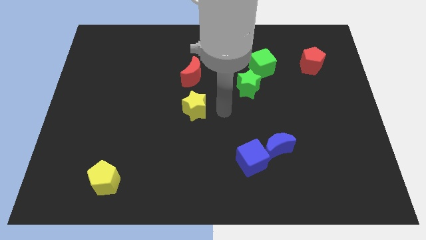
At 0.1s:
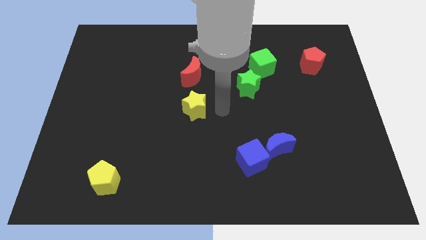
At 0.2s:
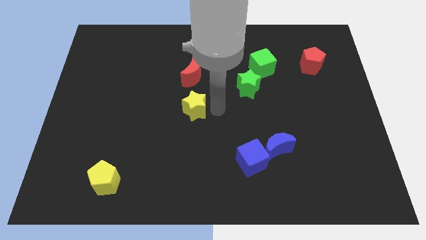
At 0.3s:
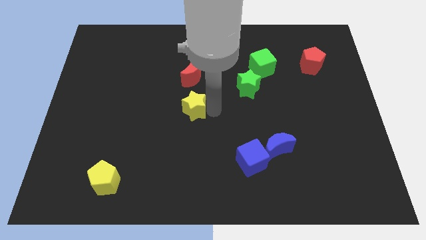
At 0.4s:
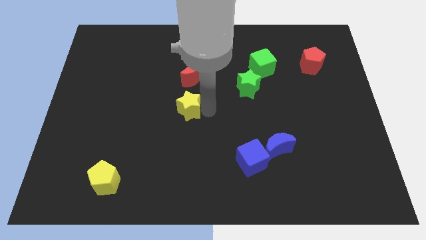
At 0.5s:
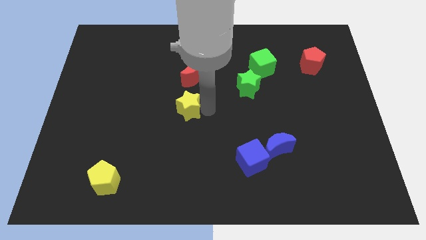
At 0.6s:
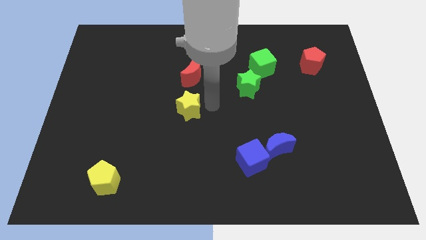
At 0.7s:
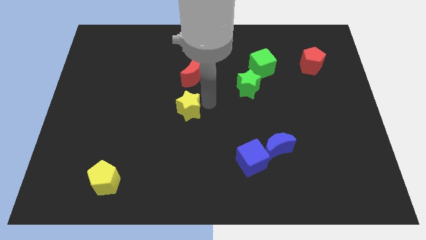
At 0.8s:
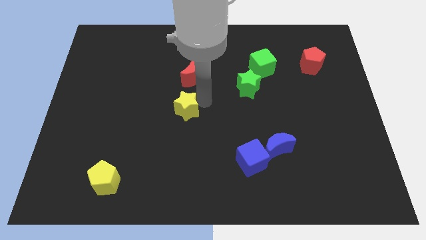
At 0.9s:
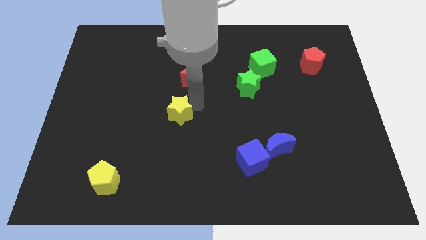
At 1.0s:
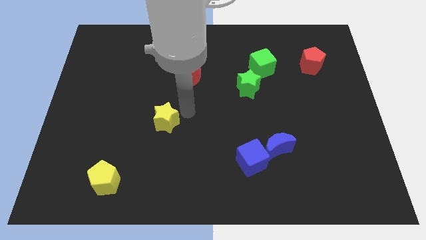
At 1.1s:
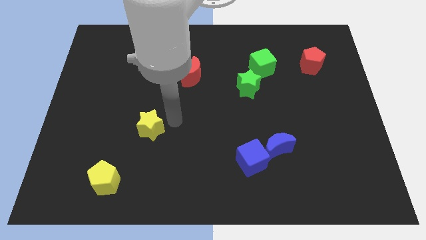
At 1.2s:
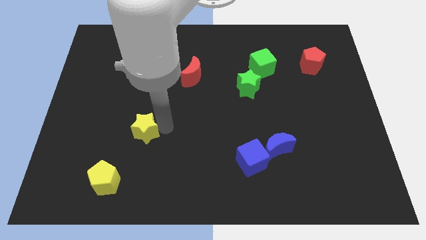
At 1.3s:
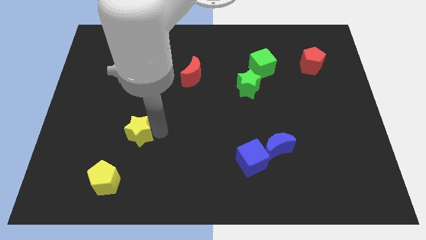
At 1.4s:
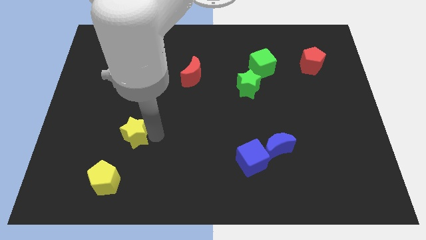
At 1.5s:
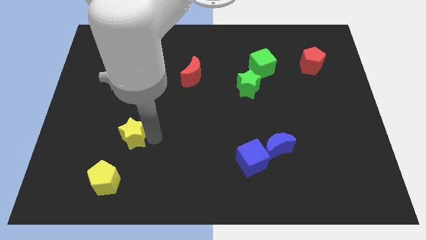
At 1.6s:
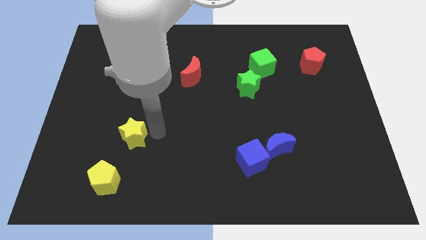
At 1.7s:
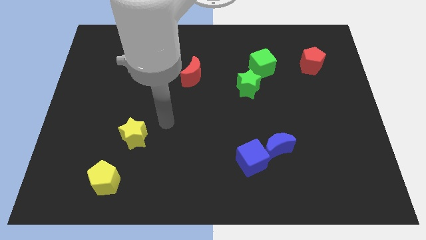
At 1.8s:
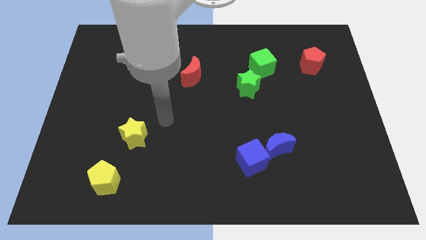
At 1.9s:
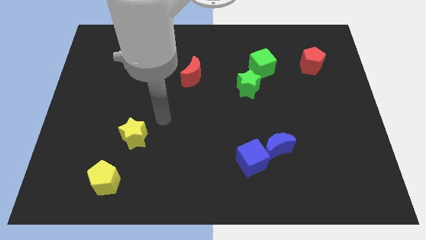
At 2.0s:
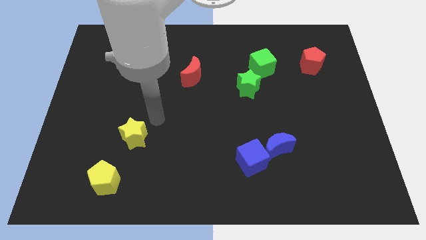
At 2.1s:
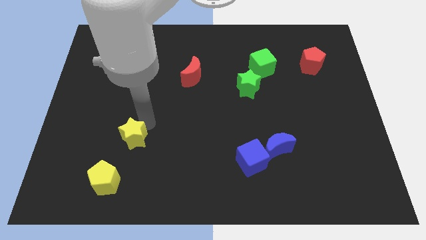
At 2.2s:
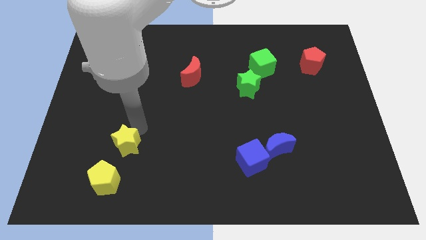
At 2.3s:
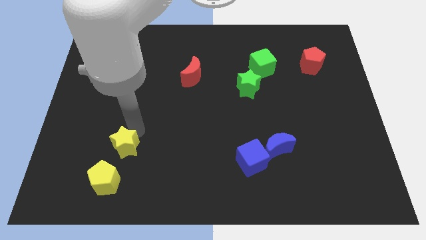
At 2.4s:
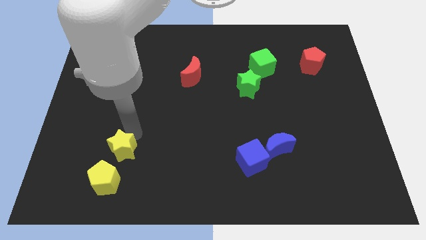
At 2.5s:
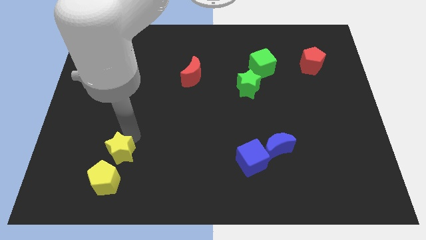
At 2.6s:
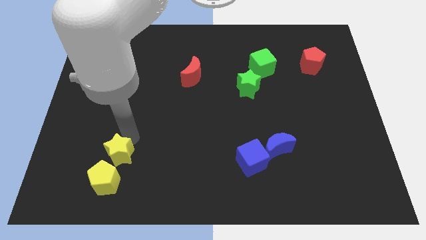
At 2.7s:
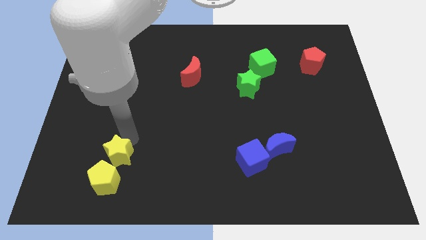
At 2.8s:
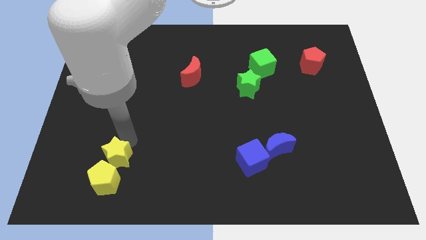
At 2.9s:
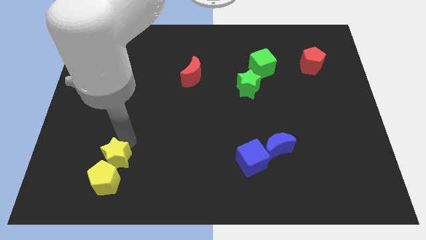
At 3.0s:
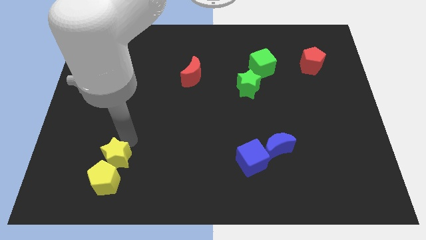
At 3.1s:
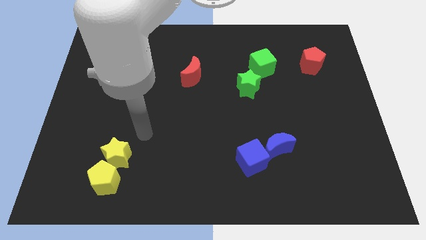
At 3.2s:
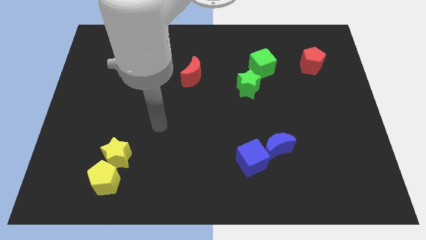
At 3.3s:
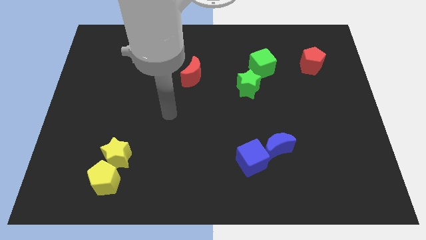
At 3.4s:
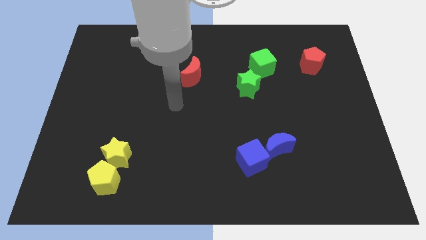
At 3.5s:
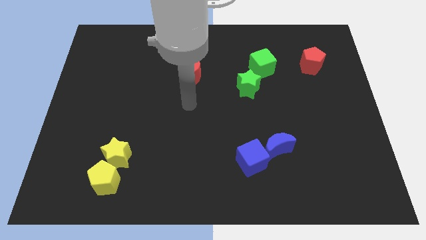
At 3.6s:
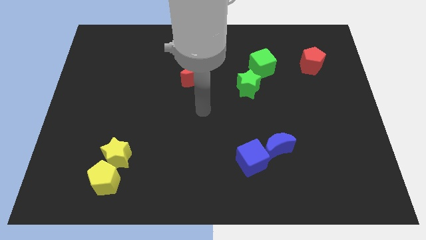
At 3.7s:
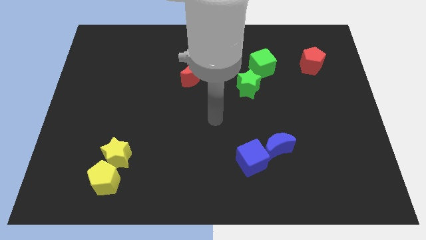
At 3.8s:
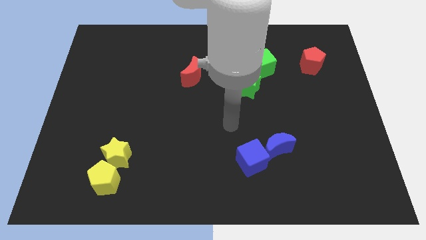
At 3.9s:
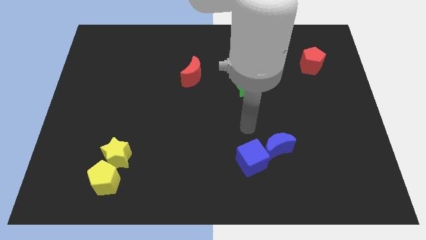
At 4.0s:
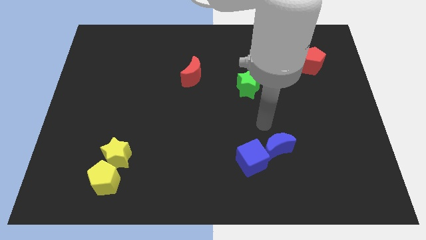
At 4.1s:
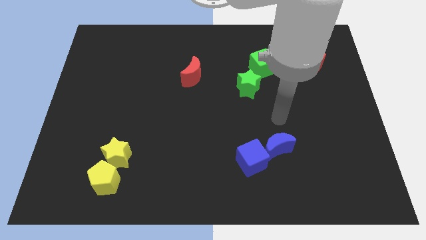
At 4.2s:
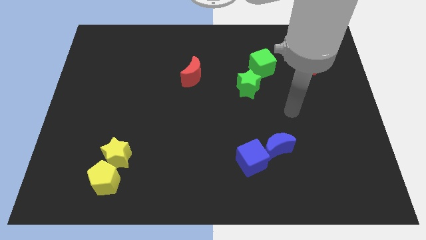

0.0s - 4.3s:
move the yellow star on to the yellow pentagon

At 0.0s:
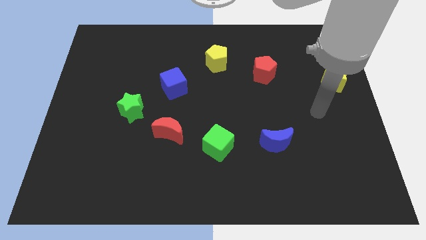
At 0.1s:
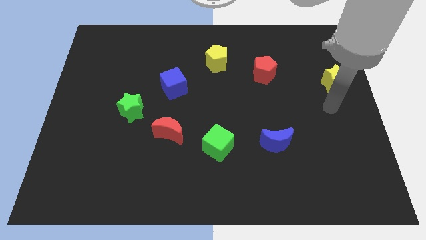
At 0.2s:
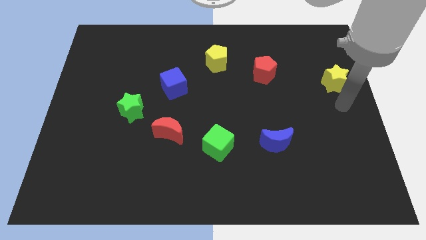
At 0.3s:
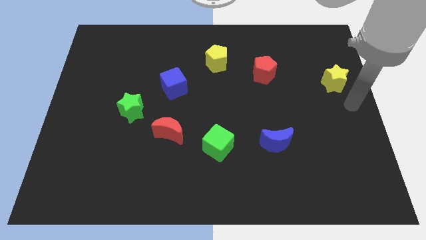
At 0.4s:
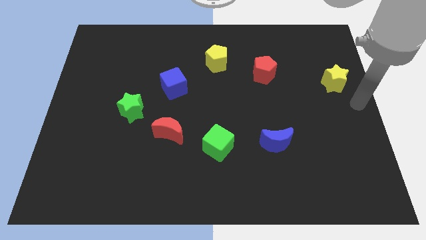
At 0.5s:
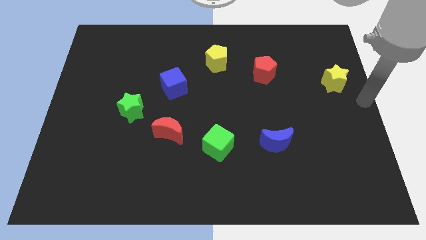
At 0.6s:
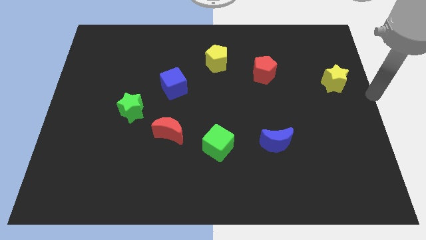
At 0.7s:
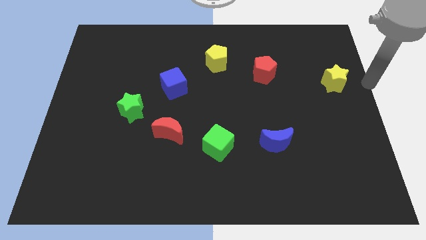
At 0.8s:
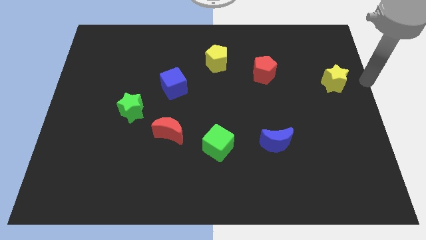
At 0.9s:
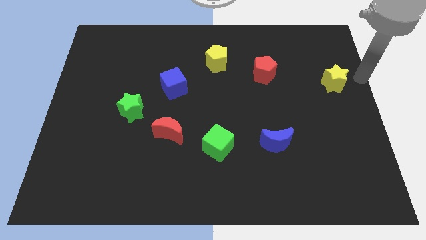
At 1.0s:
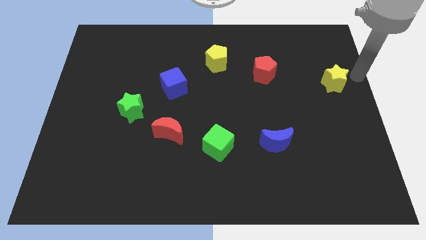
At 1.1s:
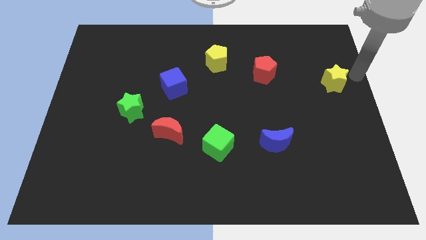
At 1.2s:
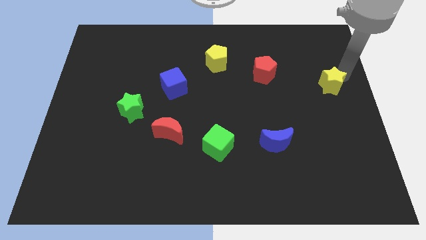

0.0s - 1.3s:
go and place your hand at the right of the yellow star

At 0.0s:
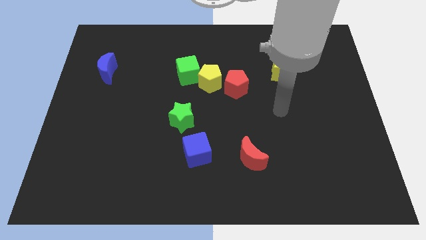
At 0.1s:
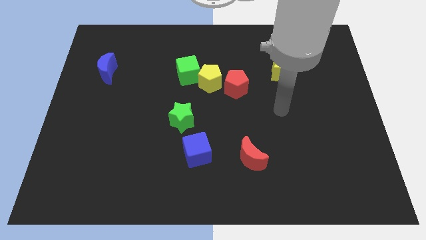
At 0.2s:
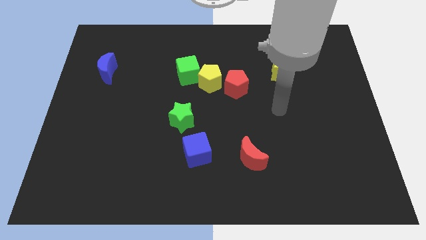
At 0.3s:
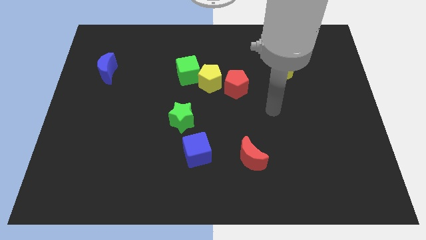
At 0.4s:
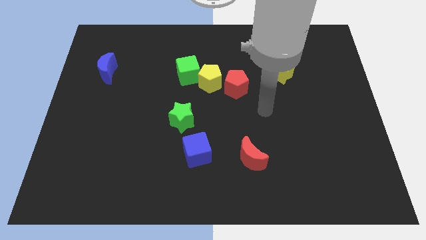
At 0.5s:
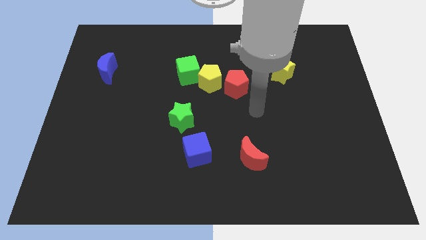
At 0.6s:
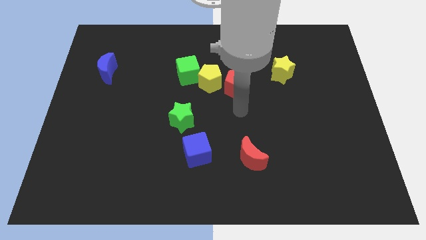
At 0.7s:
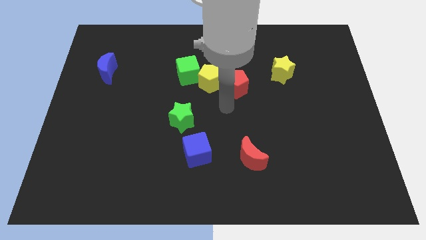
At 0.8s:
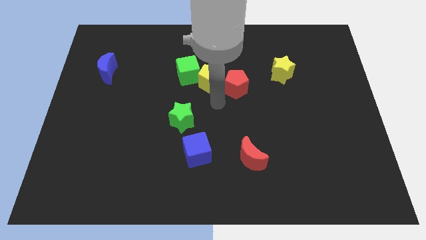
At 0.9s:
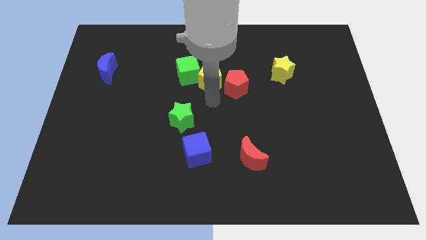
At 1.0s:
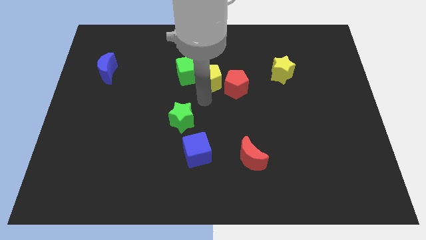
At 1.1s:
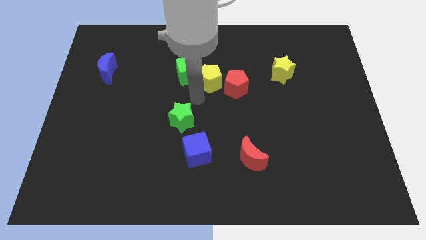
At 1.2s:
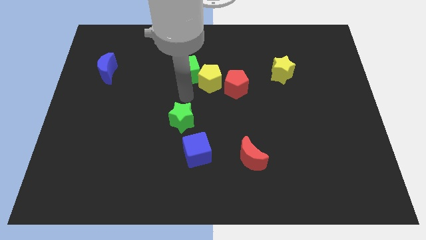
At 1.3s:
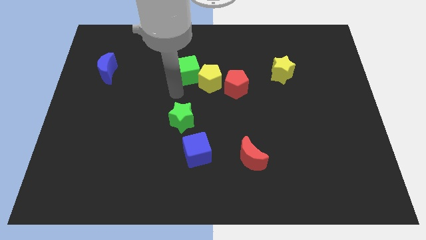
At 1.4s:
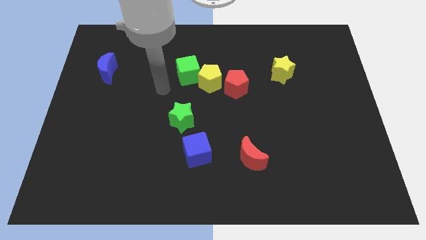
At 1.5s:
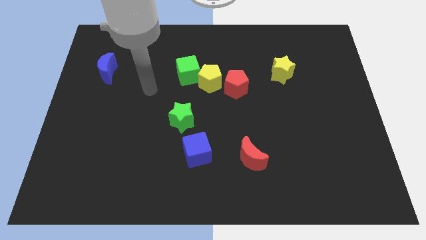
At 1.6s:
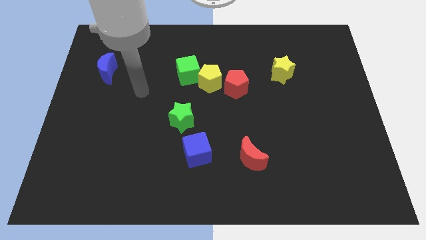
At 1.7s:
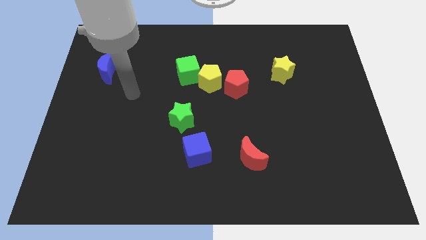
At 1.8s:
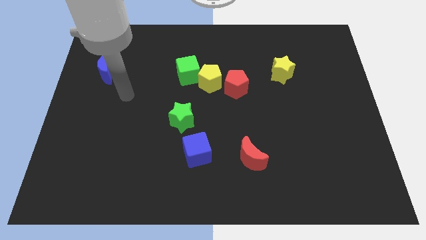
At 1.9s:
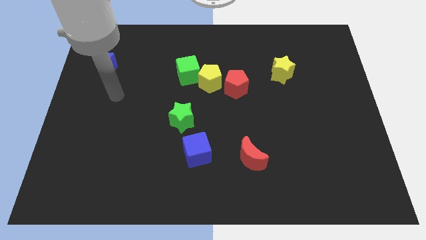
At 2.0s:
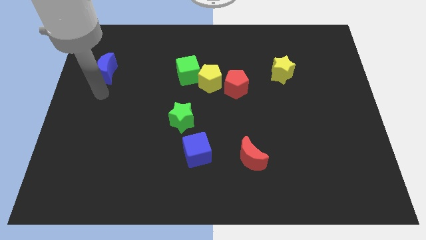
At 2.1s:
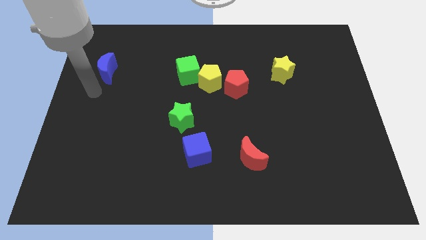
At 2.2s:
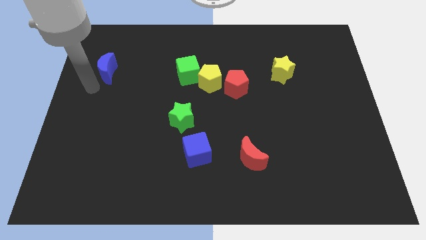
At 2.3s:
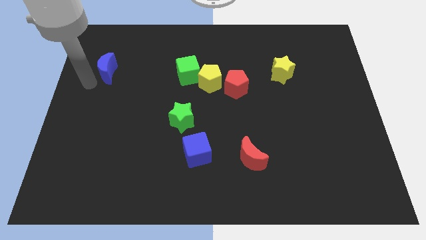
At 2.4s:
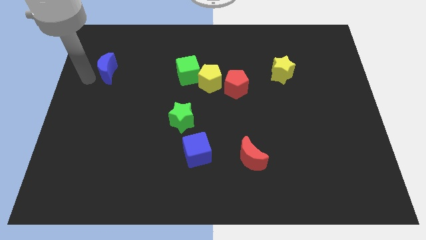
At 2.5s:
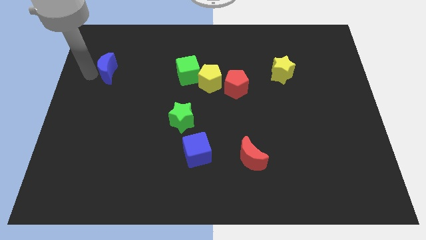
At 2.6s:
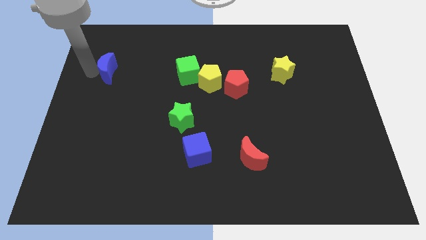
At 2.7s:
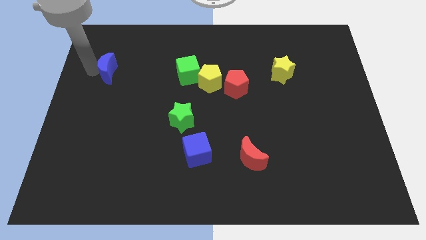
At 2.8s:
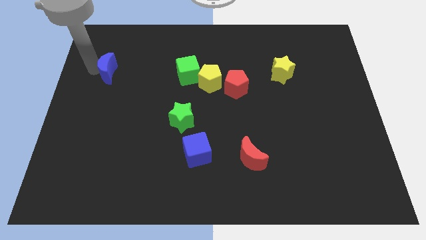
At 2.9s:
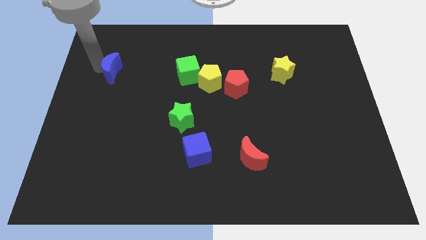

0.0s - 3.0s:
move the arm towards the blue crescent

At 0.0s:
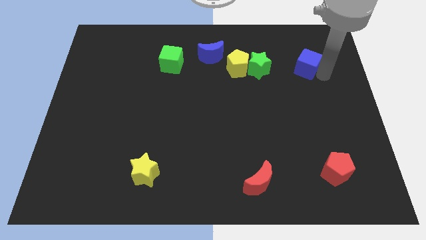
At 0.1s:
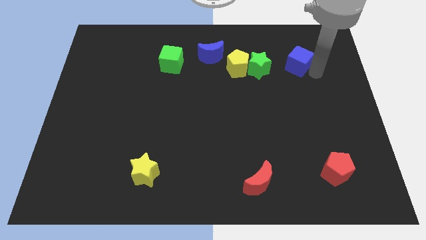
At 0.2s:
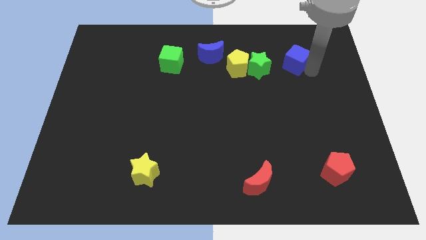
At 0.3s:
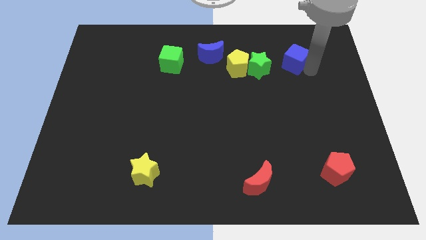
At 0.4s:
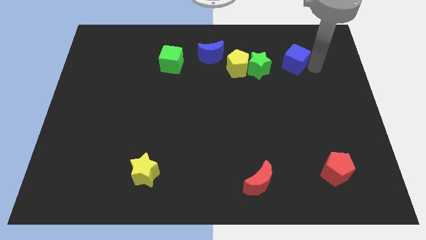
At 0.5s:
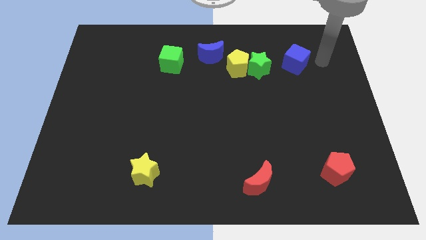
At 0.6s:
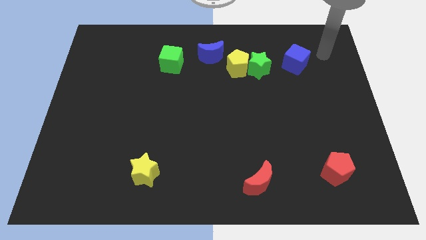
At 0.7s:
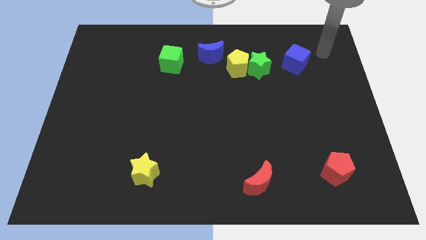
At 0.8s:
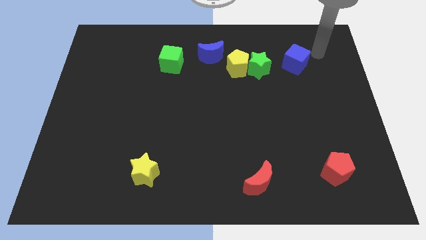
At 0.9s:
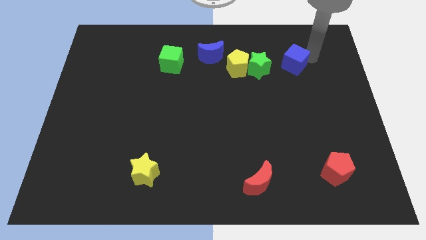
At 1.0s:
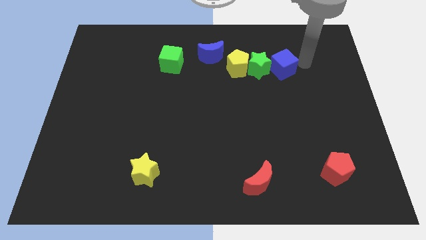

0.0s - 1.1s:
place the blue cube close to the right of the green star
